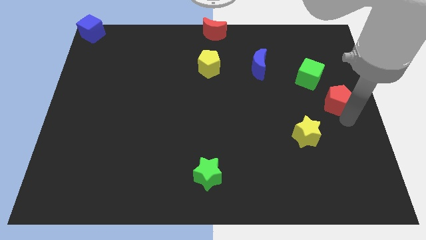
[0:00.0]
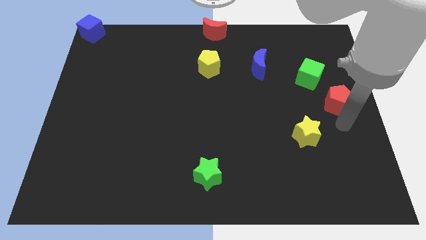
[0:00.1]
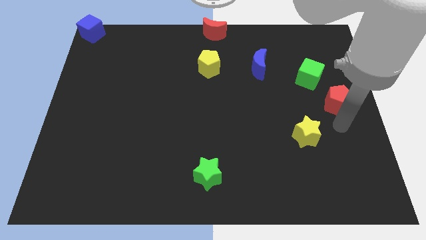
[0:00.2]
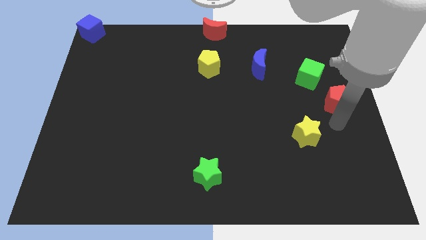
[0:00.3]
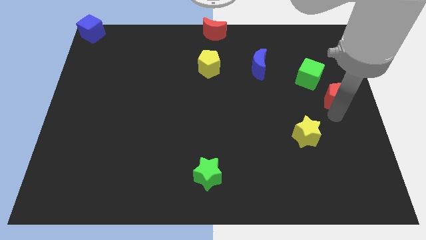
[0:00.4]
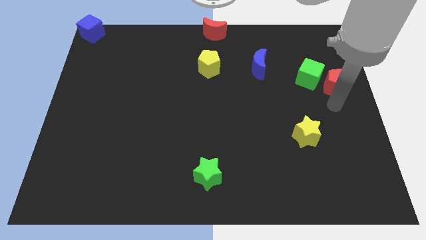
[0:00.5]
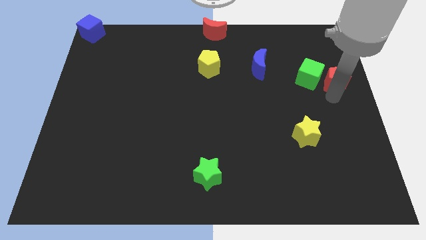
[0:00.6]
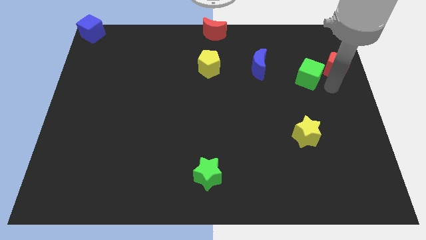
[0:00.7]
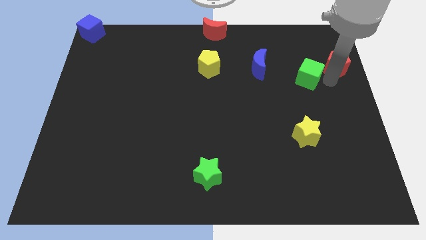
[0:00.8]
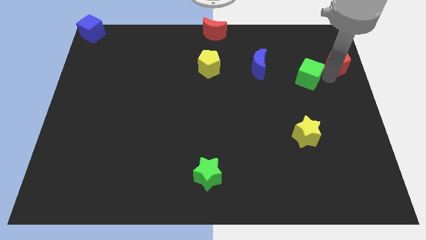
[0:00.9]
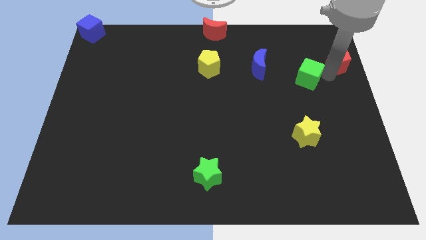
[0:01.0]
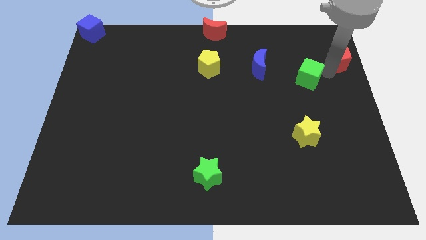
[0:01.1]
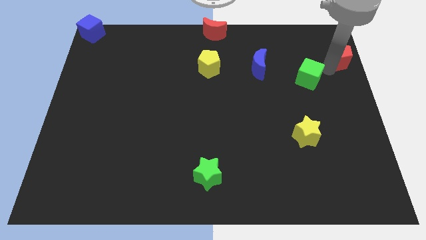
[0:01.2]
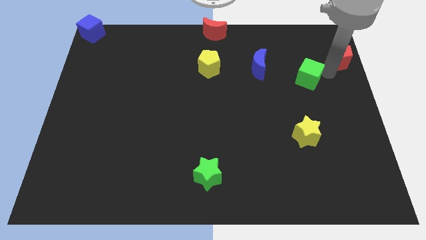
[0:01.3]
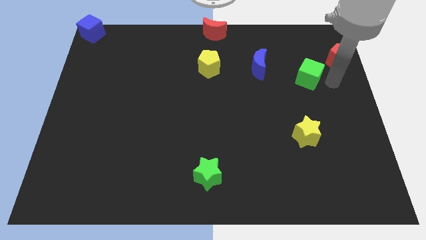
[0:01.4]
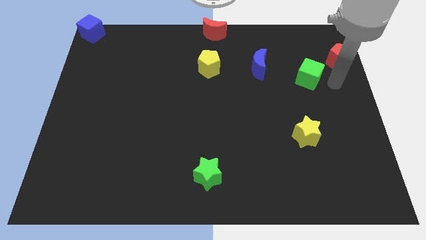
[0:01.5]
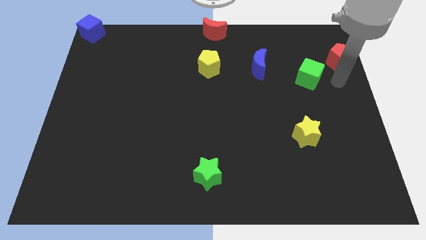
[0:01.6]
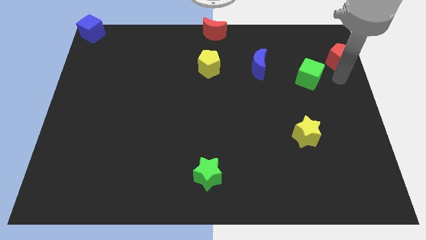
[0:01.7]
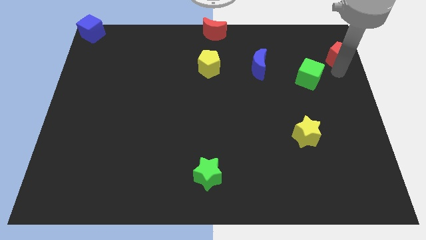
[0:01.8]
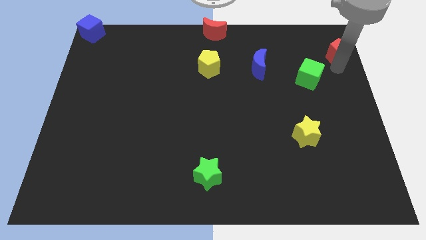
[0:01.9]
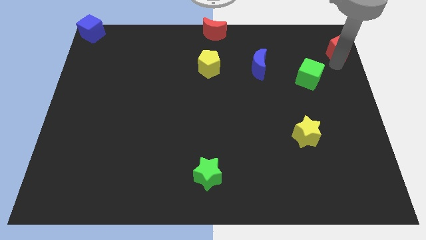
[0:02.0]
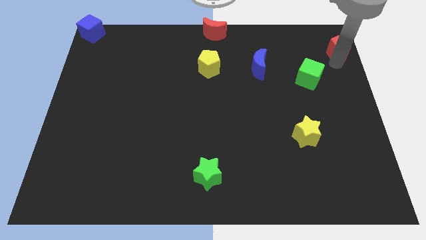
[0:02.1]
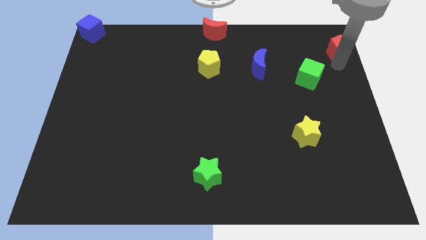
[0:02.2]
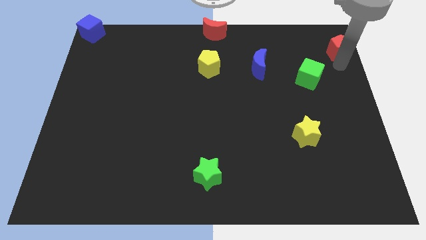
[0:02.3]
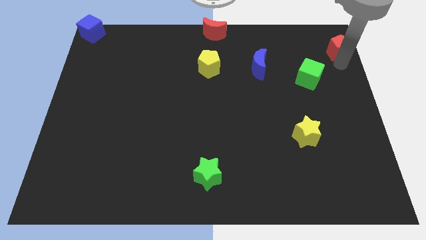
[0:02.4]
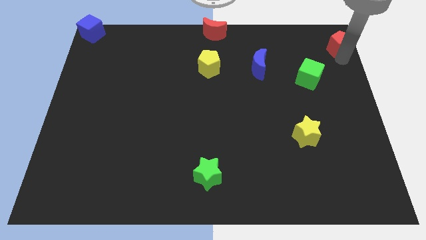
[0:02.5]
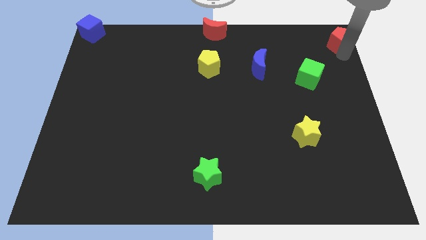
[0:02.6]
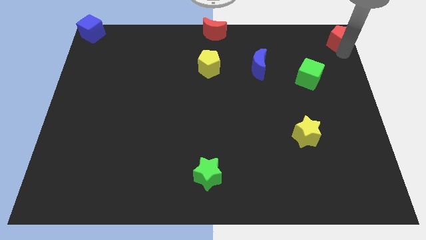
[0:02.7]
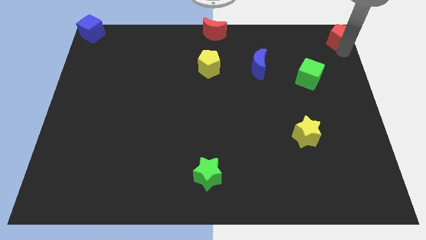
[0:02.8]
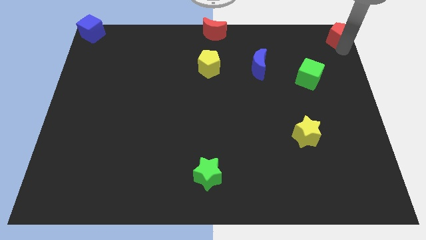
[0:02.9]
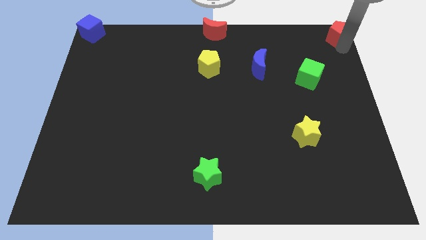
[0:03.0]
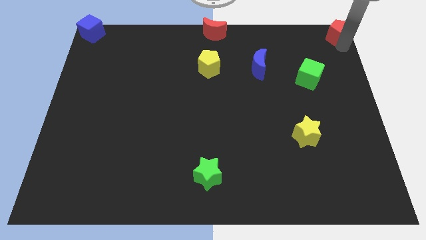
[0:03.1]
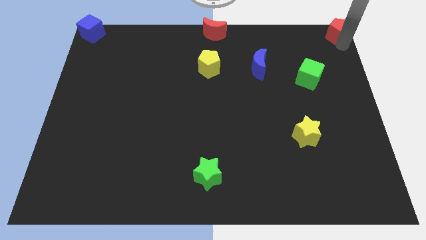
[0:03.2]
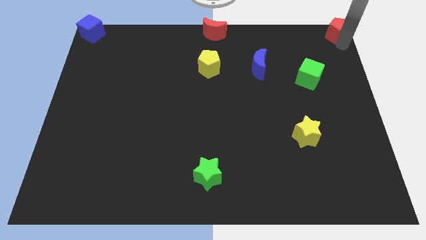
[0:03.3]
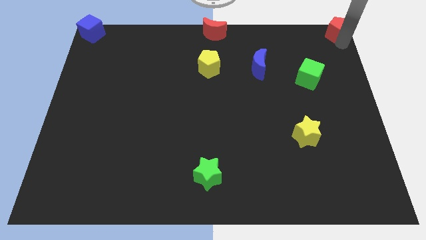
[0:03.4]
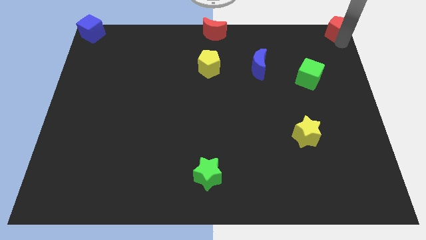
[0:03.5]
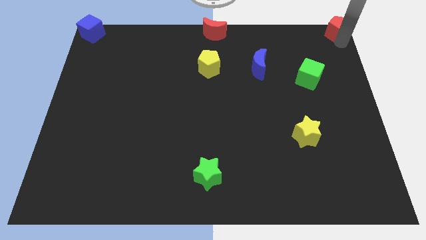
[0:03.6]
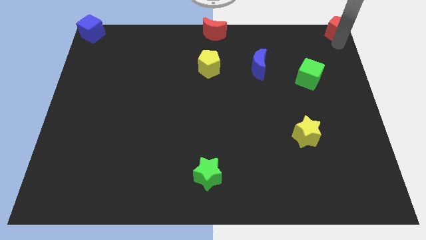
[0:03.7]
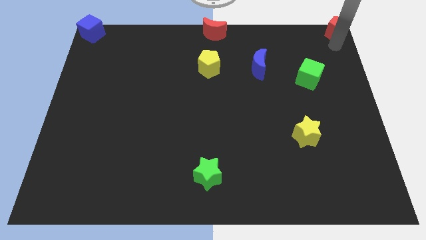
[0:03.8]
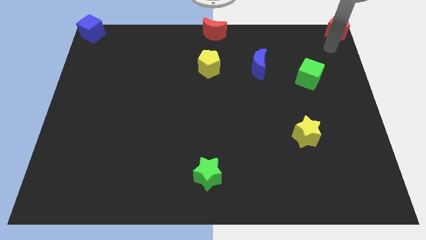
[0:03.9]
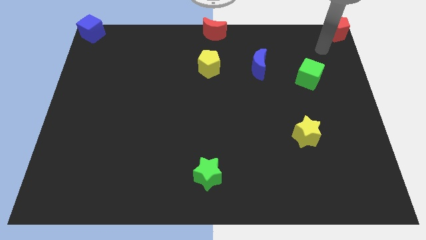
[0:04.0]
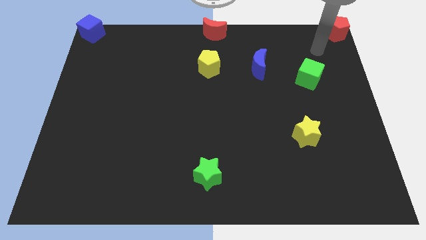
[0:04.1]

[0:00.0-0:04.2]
move the red pentagon to the top right corner of the board

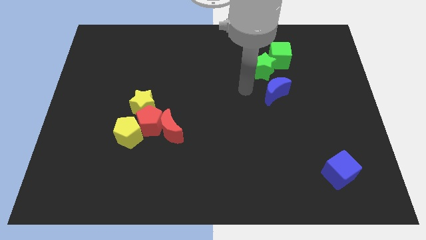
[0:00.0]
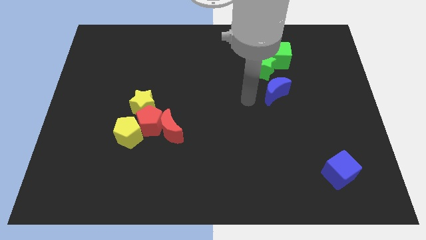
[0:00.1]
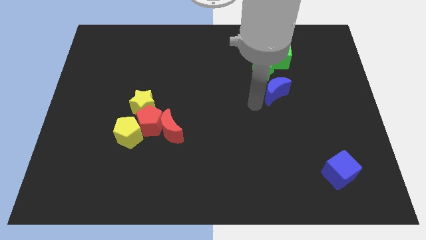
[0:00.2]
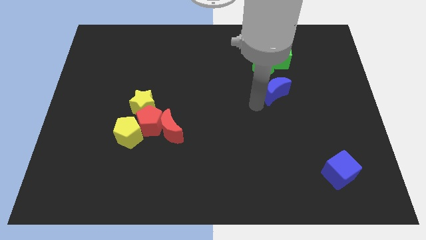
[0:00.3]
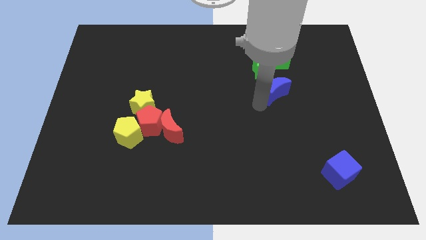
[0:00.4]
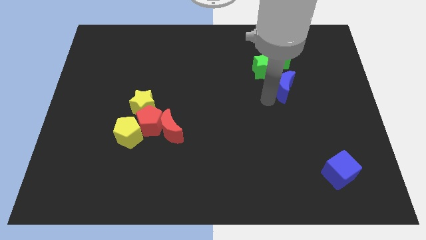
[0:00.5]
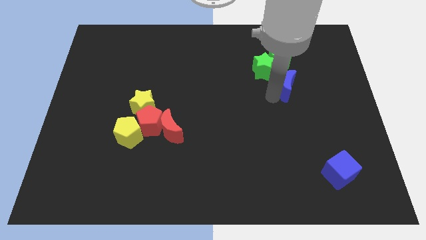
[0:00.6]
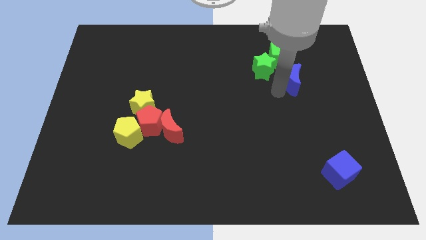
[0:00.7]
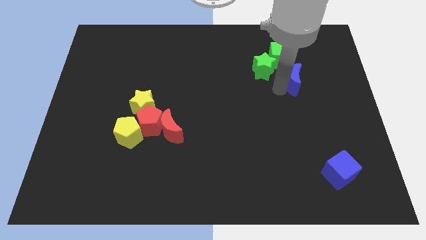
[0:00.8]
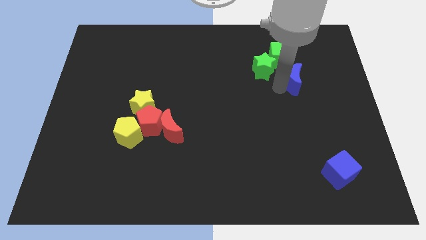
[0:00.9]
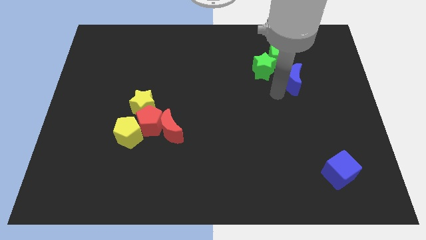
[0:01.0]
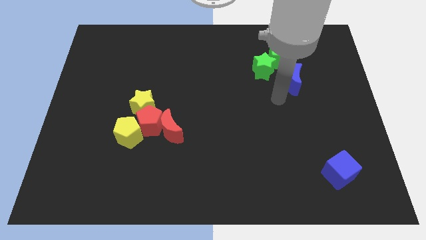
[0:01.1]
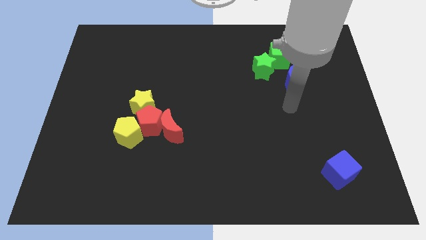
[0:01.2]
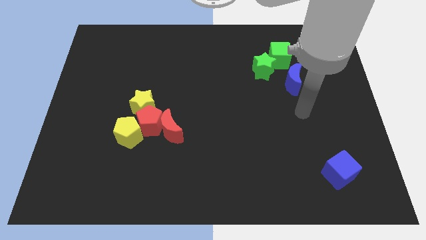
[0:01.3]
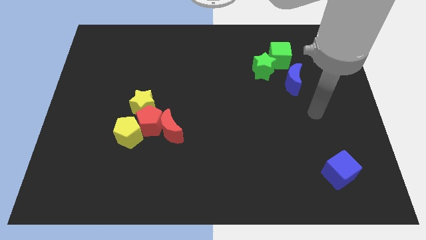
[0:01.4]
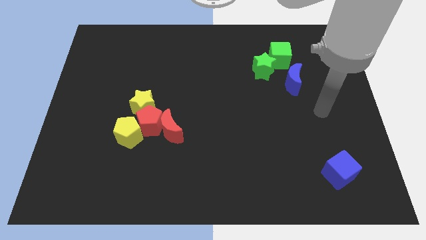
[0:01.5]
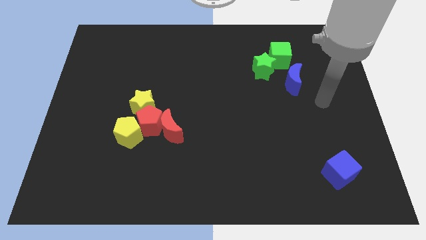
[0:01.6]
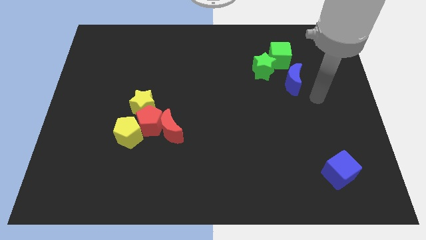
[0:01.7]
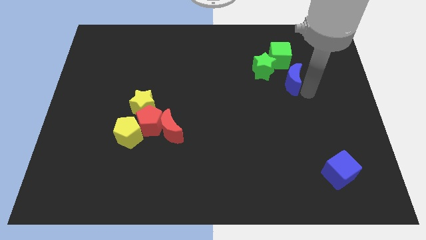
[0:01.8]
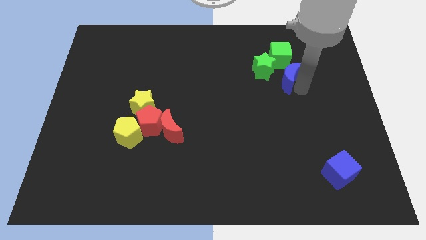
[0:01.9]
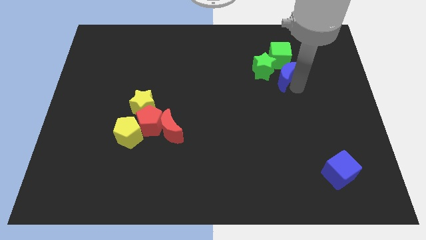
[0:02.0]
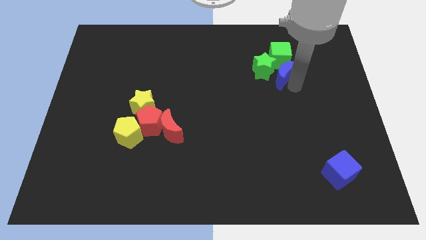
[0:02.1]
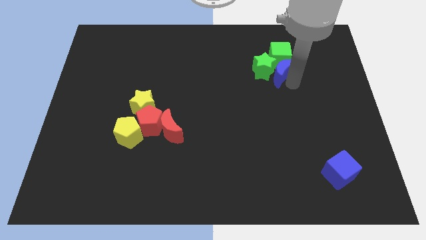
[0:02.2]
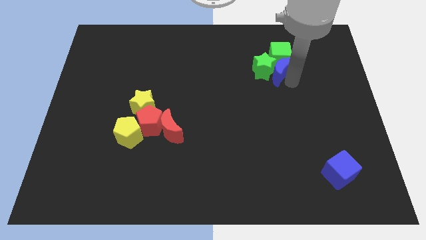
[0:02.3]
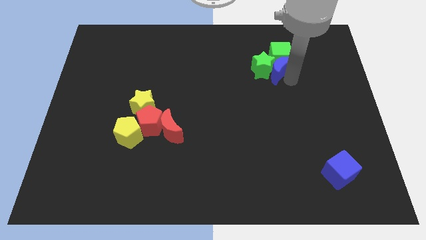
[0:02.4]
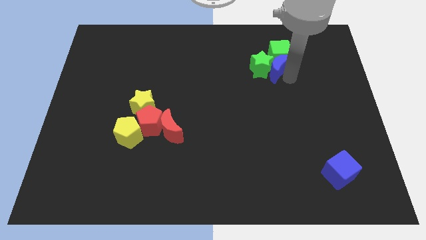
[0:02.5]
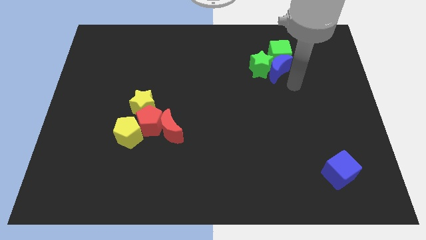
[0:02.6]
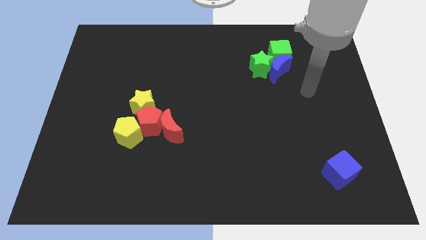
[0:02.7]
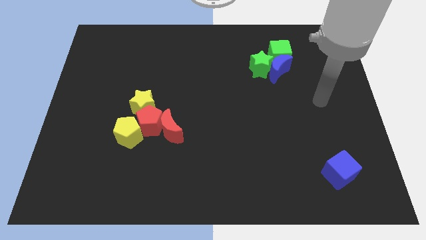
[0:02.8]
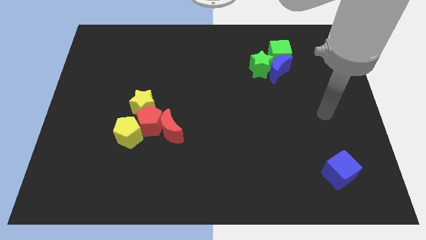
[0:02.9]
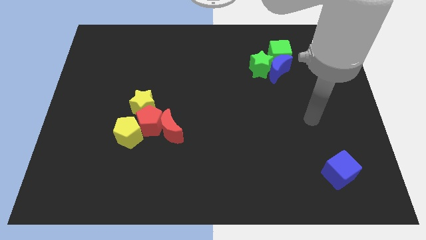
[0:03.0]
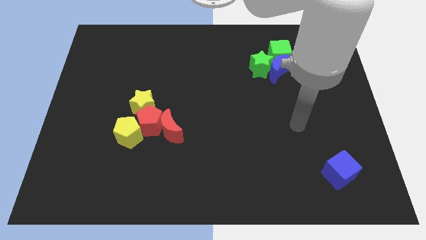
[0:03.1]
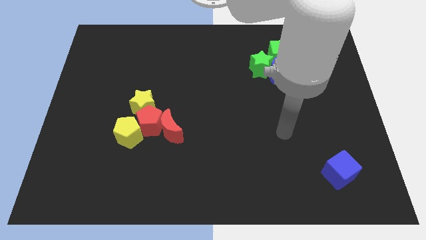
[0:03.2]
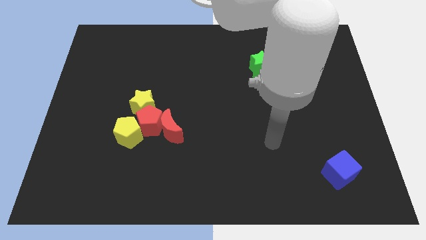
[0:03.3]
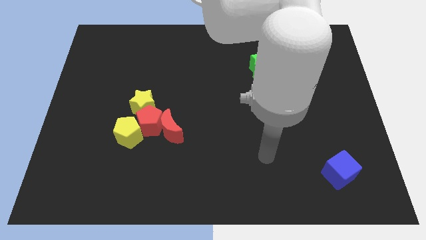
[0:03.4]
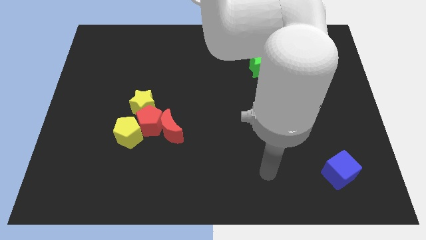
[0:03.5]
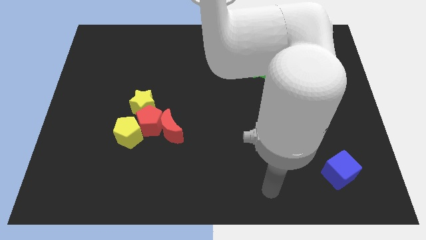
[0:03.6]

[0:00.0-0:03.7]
push the blue crescent below the green cube

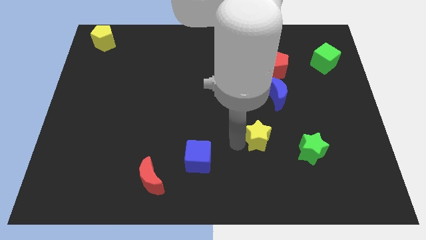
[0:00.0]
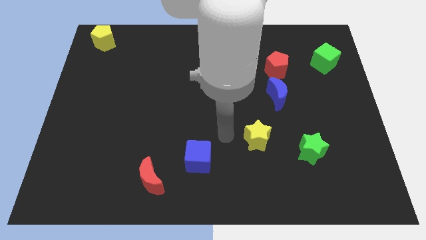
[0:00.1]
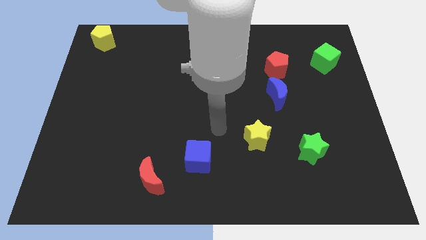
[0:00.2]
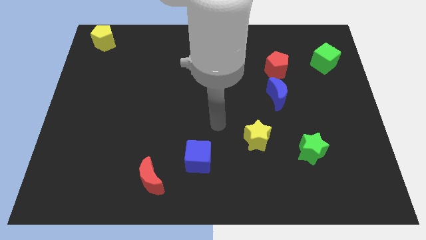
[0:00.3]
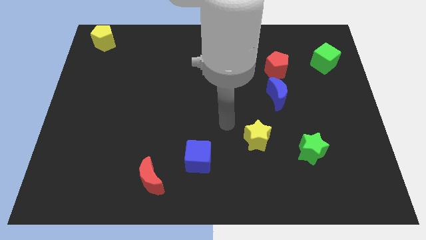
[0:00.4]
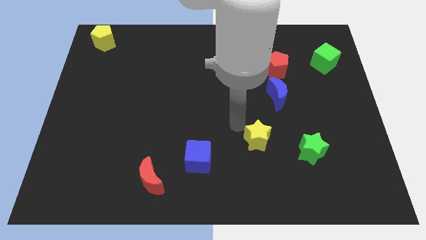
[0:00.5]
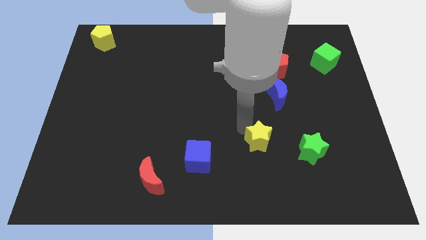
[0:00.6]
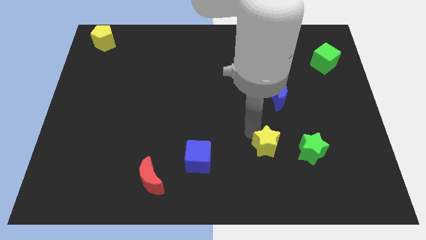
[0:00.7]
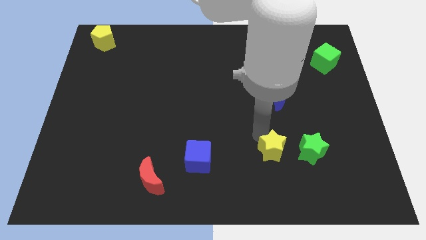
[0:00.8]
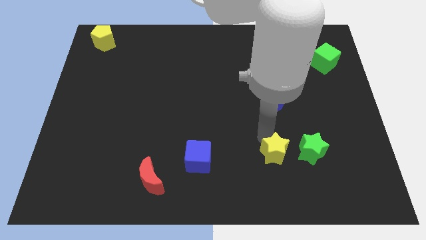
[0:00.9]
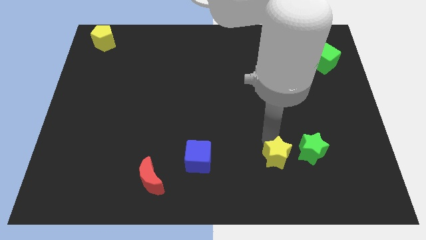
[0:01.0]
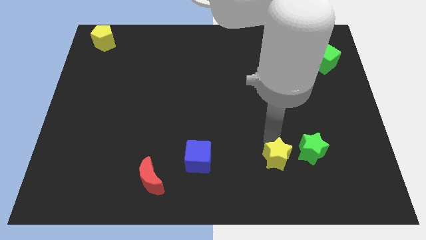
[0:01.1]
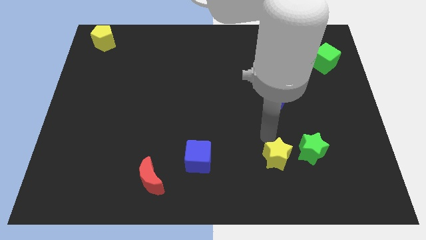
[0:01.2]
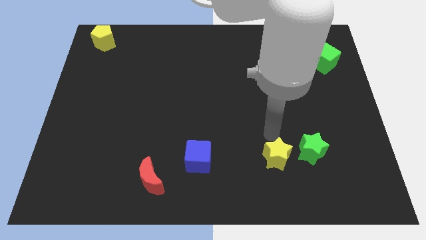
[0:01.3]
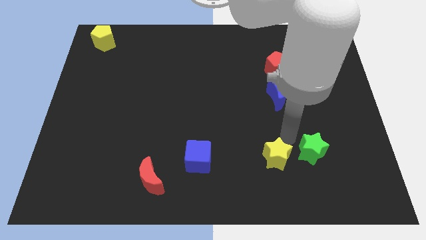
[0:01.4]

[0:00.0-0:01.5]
place the yellow star in between the green star and the blue cube
